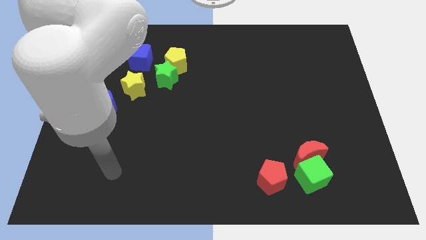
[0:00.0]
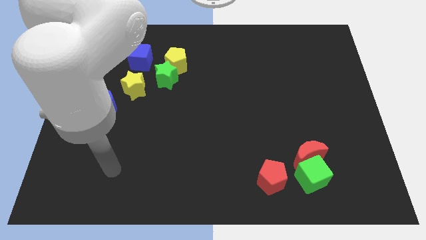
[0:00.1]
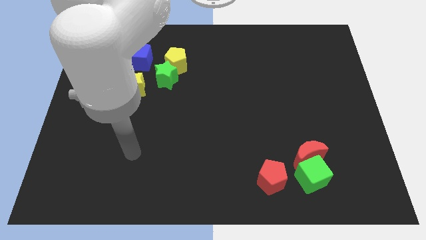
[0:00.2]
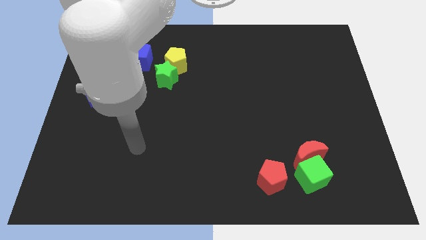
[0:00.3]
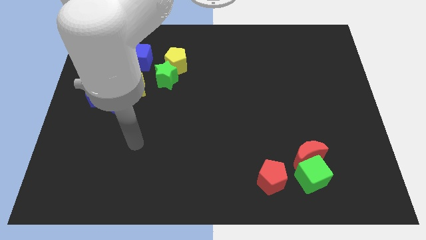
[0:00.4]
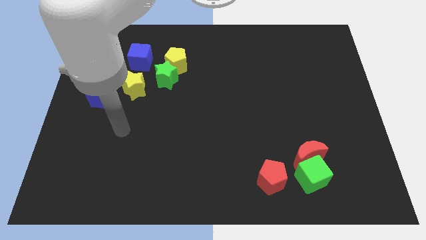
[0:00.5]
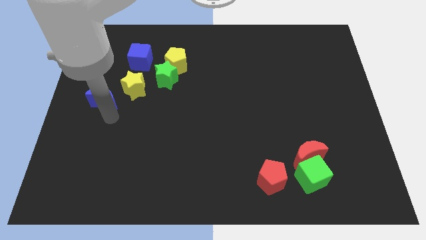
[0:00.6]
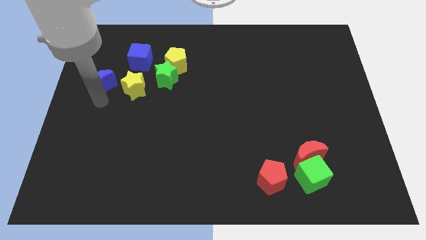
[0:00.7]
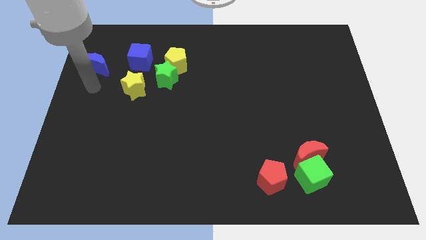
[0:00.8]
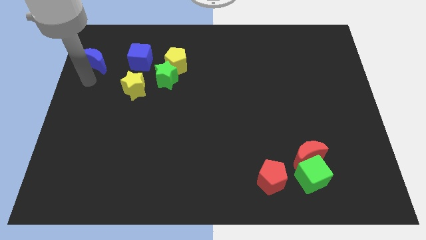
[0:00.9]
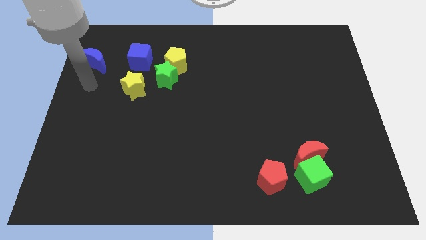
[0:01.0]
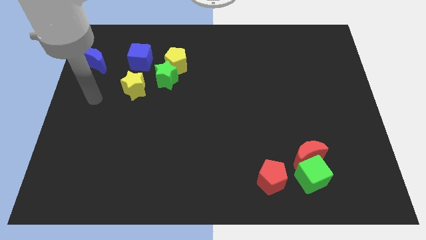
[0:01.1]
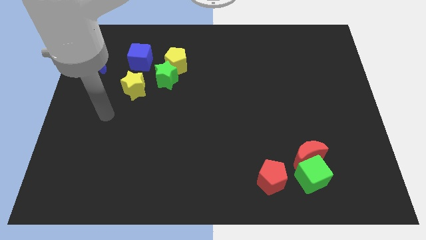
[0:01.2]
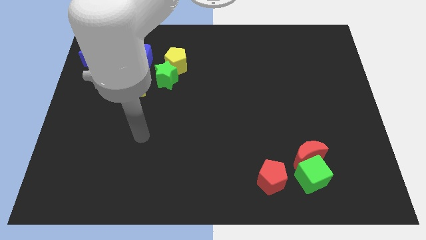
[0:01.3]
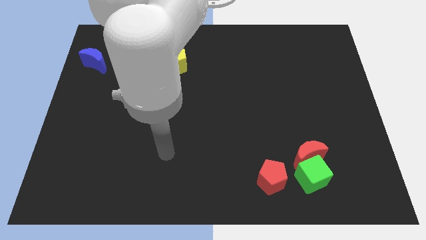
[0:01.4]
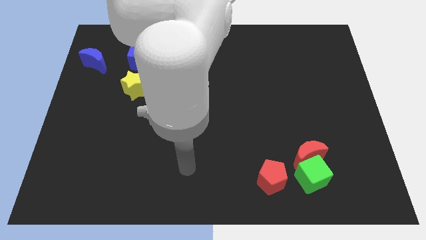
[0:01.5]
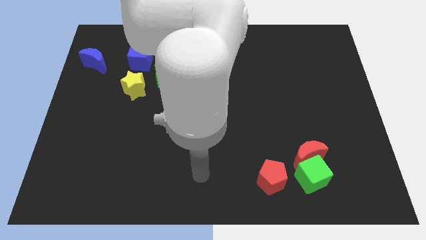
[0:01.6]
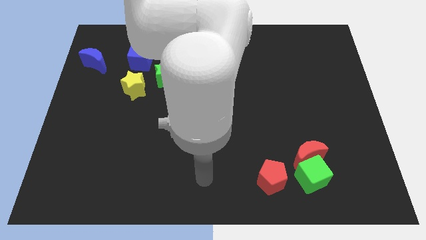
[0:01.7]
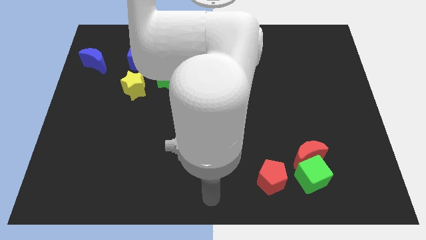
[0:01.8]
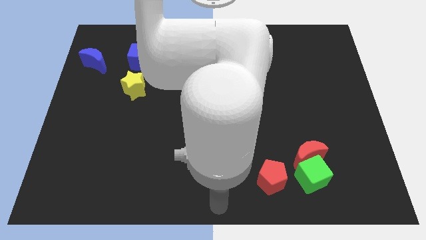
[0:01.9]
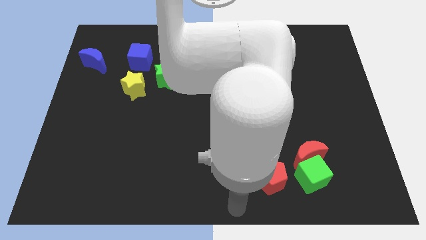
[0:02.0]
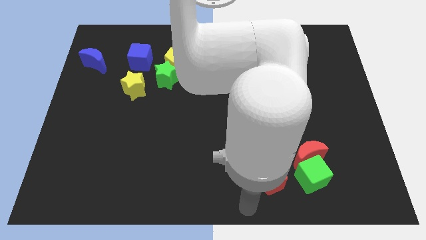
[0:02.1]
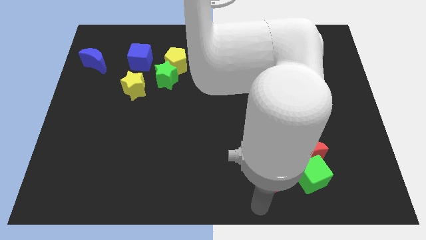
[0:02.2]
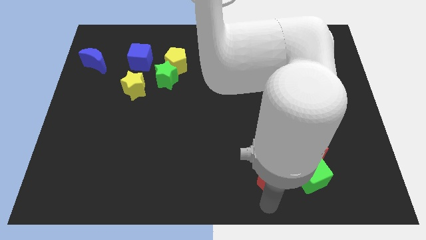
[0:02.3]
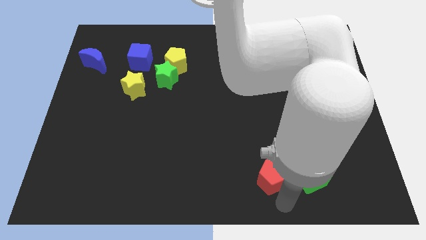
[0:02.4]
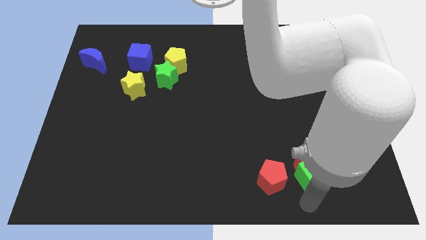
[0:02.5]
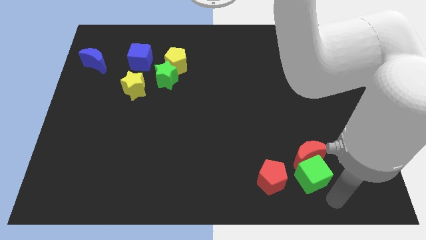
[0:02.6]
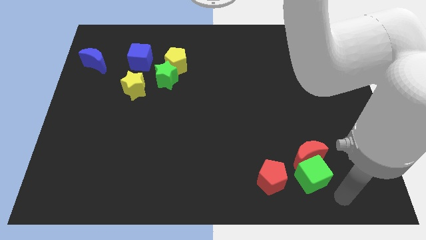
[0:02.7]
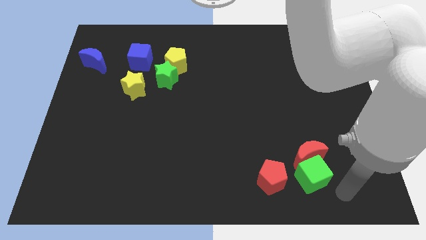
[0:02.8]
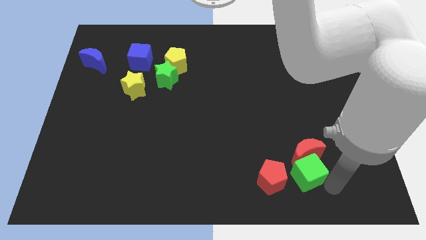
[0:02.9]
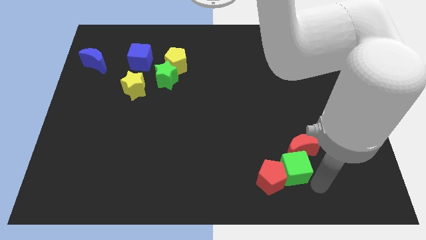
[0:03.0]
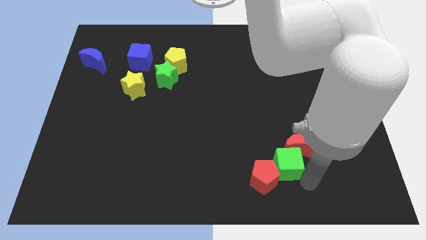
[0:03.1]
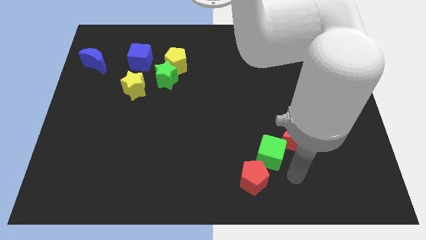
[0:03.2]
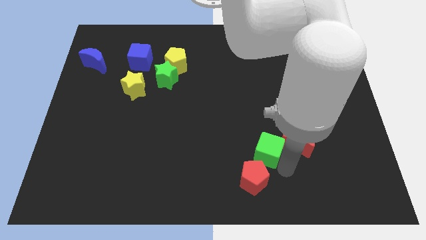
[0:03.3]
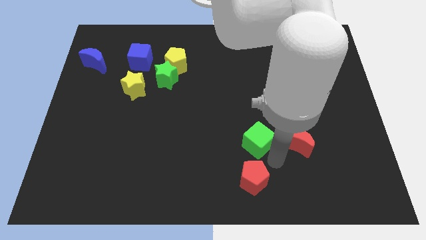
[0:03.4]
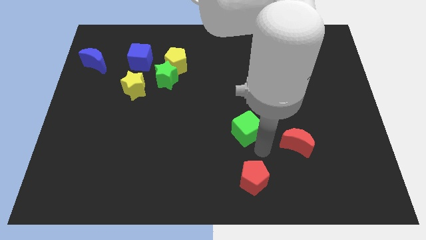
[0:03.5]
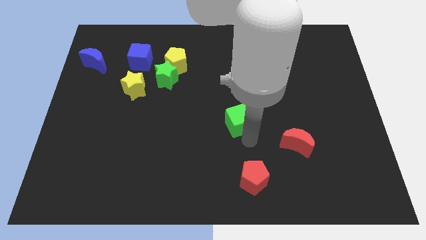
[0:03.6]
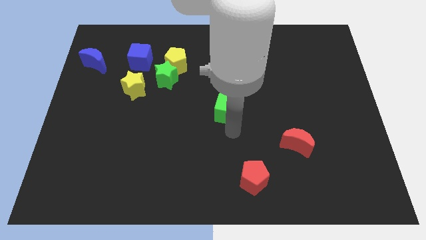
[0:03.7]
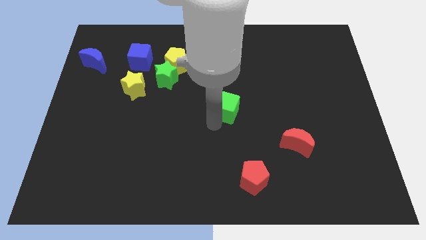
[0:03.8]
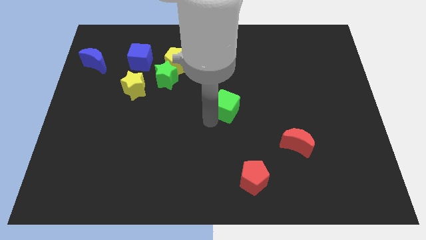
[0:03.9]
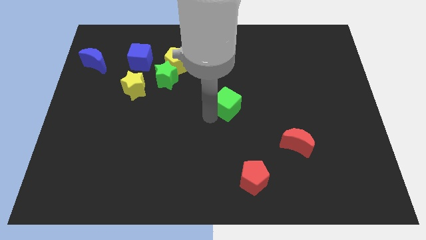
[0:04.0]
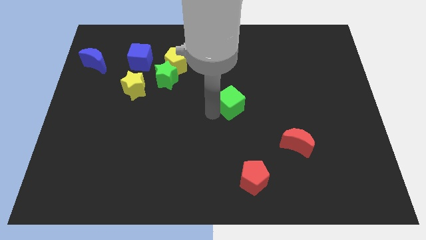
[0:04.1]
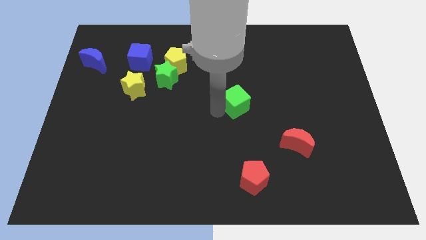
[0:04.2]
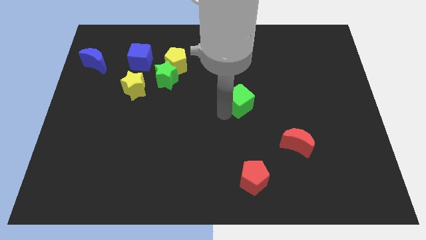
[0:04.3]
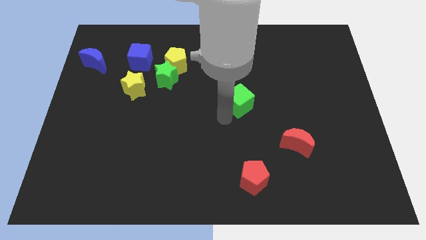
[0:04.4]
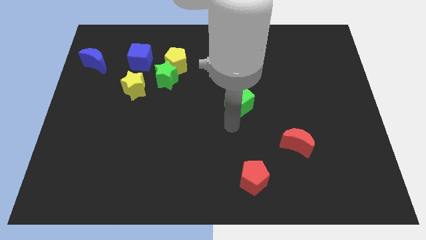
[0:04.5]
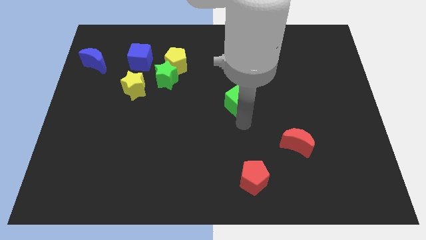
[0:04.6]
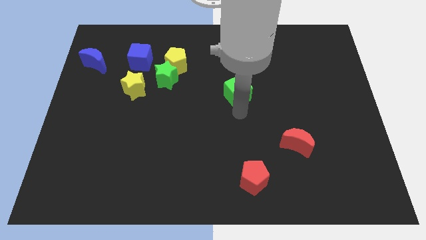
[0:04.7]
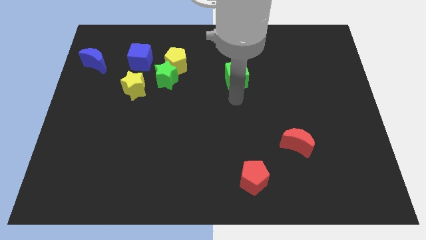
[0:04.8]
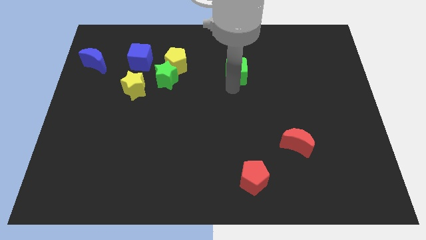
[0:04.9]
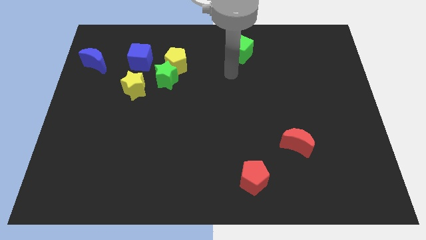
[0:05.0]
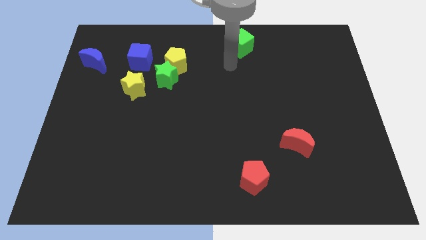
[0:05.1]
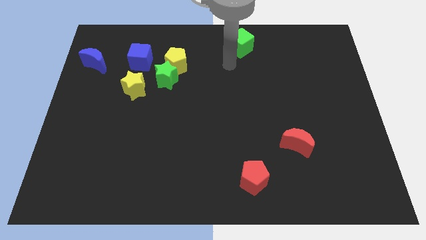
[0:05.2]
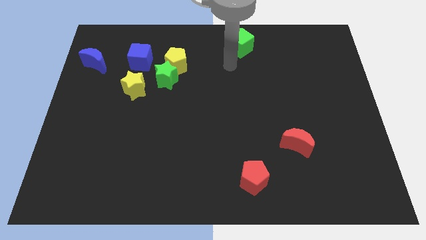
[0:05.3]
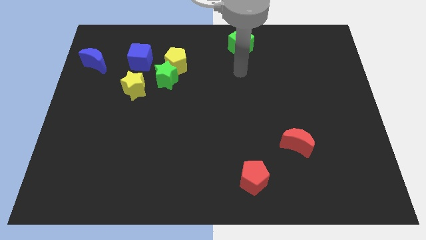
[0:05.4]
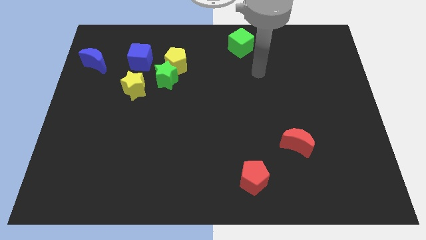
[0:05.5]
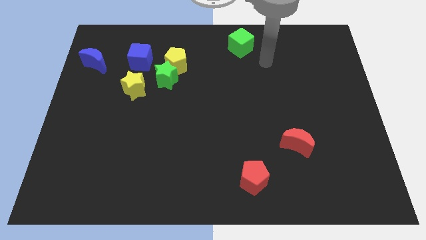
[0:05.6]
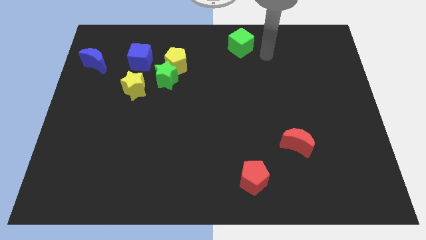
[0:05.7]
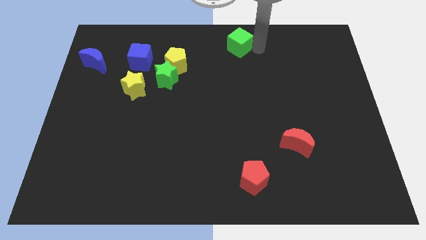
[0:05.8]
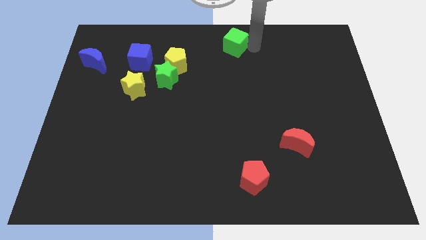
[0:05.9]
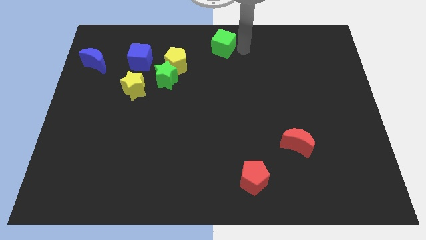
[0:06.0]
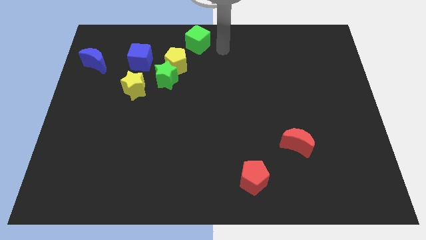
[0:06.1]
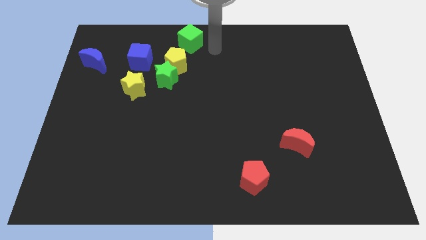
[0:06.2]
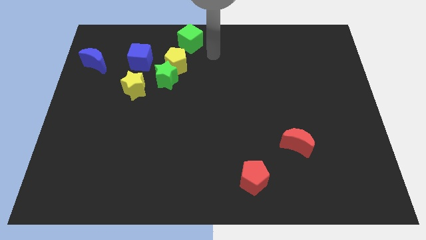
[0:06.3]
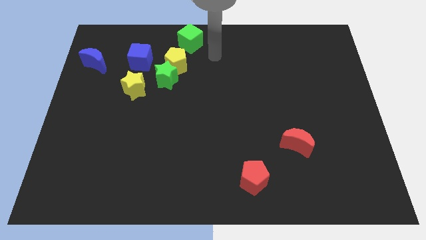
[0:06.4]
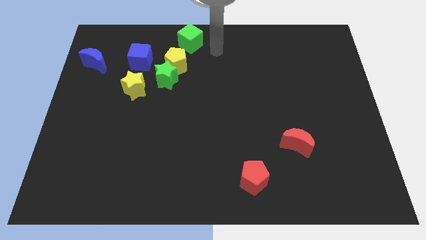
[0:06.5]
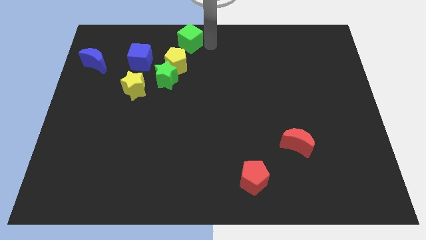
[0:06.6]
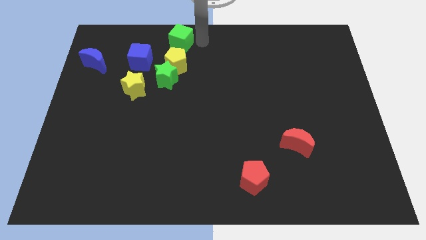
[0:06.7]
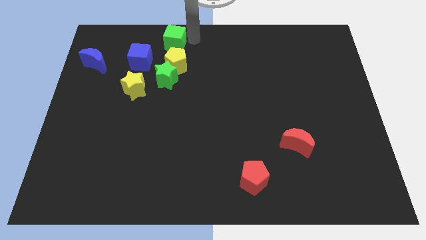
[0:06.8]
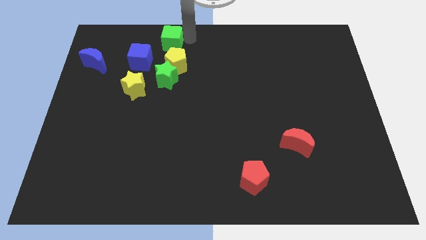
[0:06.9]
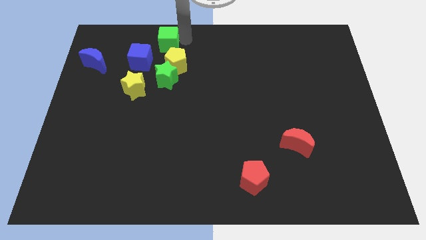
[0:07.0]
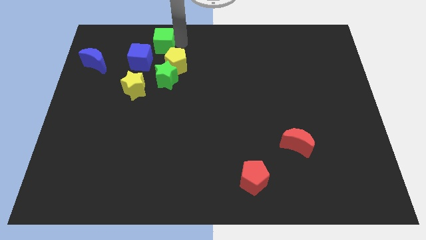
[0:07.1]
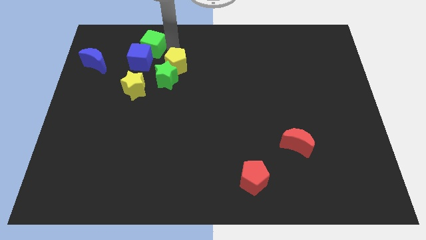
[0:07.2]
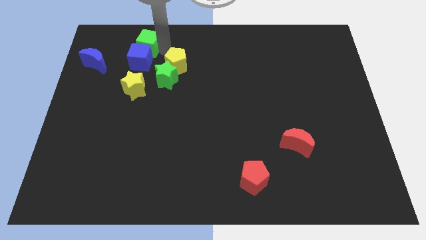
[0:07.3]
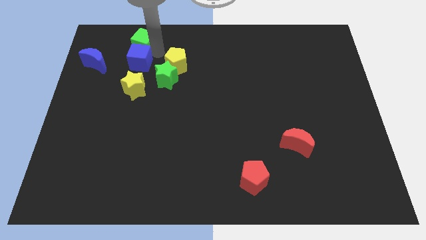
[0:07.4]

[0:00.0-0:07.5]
push the green cube towards the blue cube

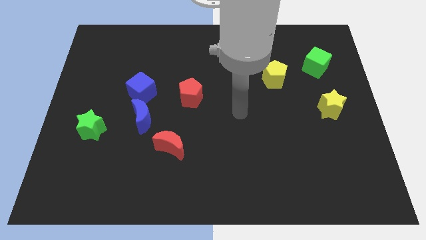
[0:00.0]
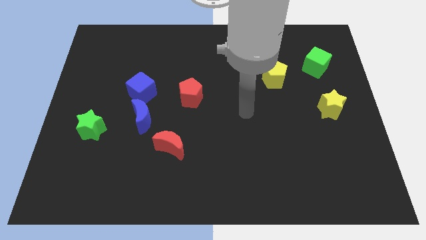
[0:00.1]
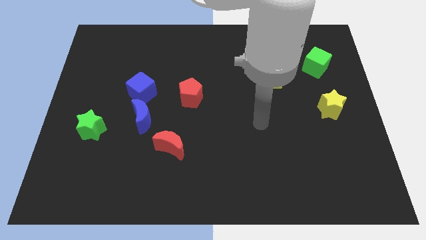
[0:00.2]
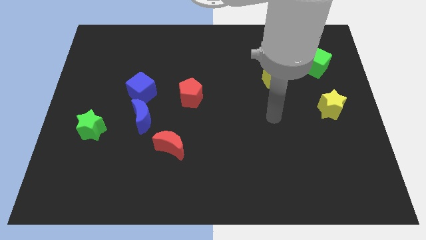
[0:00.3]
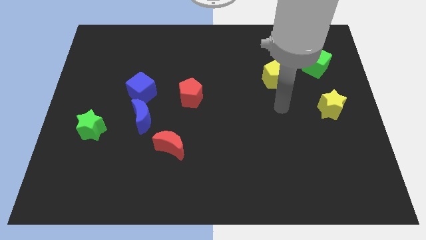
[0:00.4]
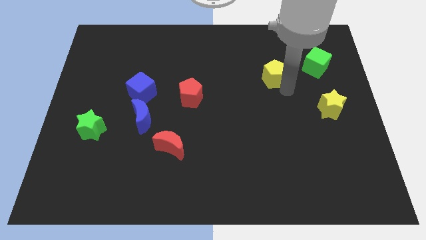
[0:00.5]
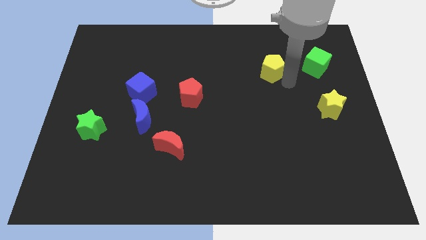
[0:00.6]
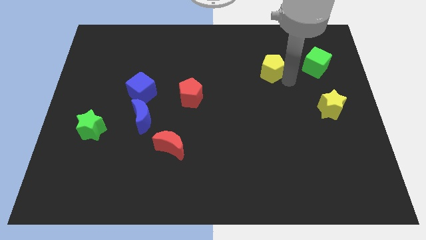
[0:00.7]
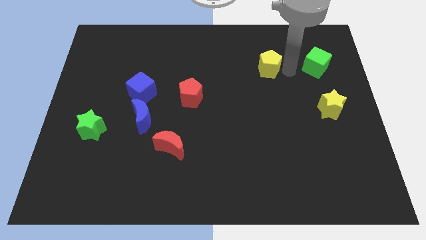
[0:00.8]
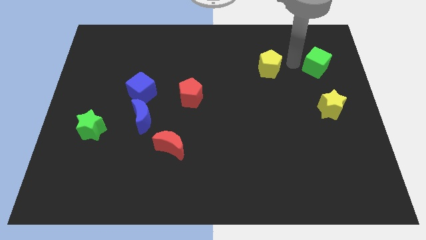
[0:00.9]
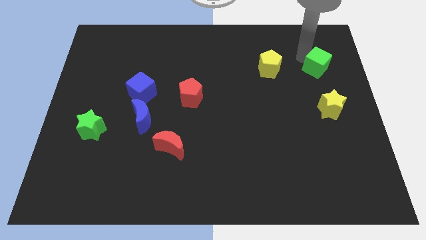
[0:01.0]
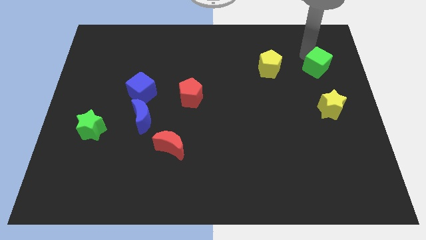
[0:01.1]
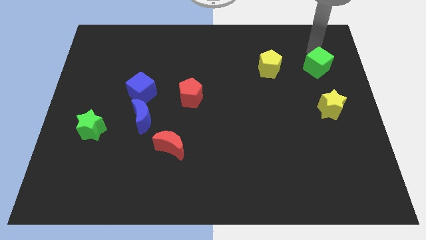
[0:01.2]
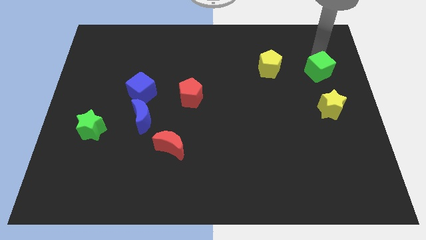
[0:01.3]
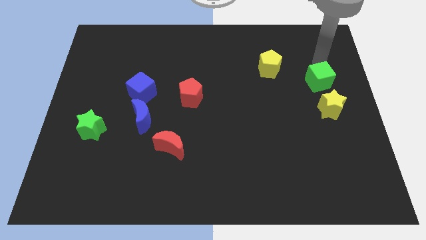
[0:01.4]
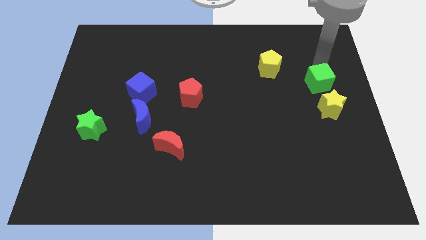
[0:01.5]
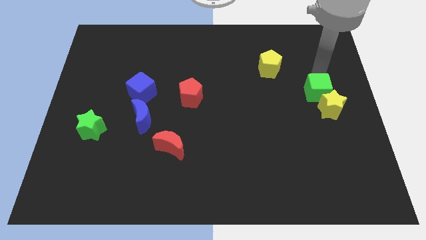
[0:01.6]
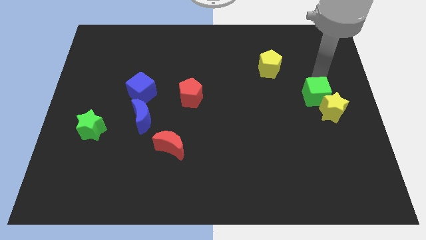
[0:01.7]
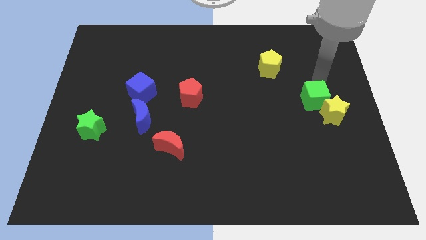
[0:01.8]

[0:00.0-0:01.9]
put the green cube close to the yellow star
